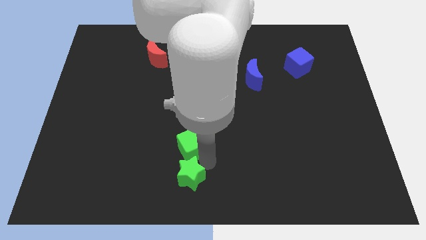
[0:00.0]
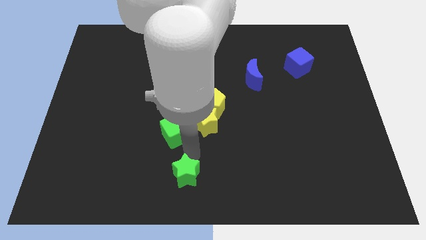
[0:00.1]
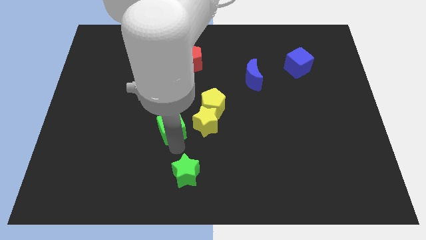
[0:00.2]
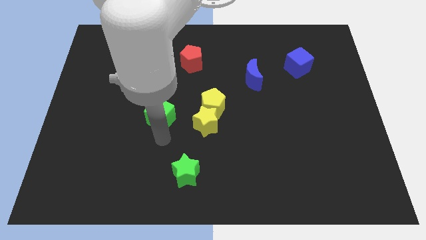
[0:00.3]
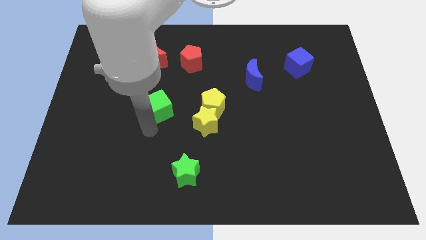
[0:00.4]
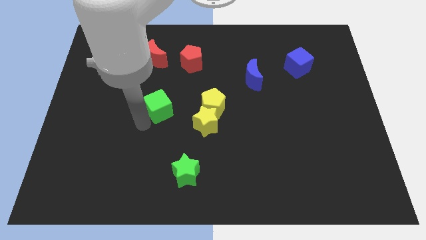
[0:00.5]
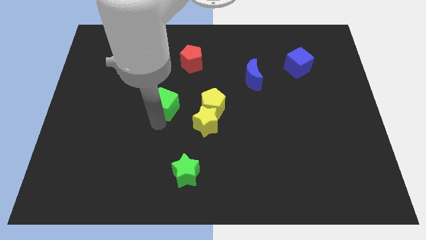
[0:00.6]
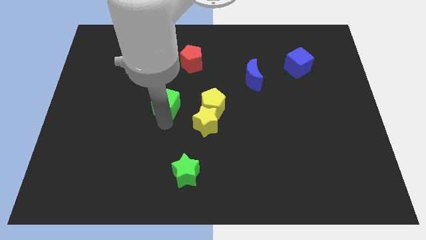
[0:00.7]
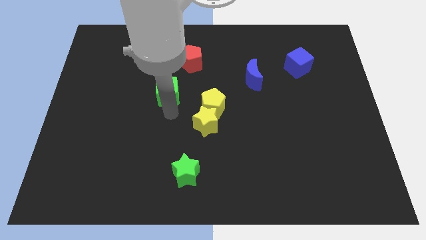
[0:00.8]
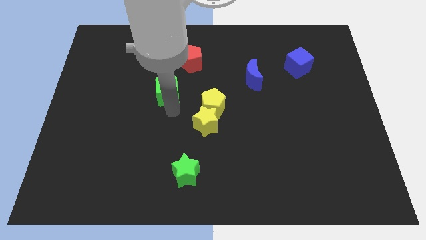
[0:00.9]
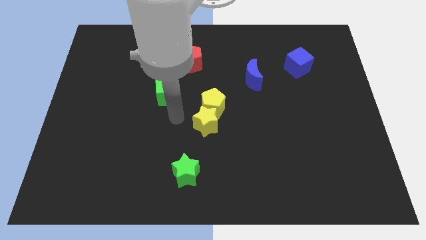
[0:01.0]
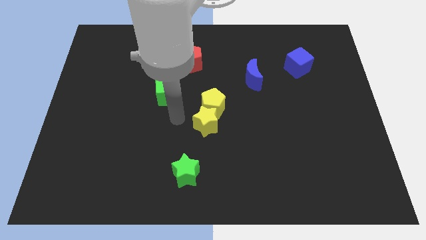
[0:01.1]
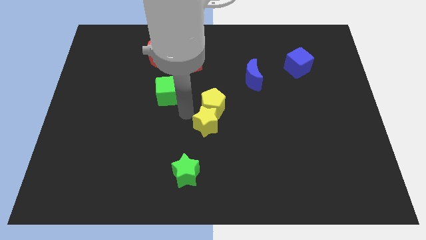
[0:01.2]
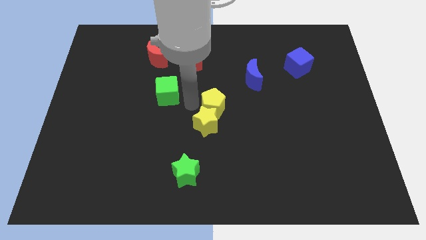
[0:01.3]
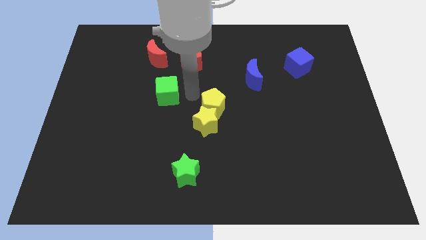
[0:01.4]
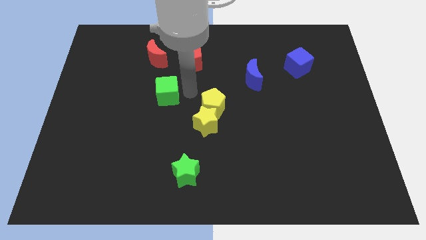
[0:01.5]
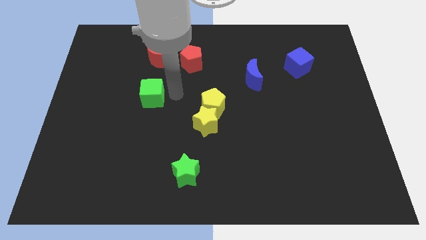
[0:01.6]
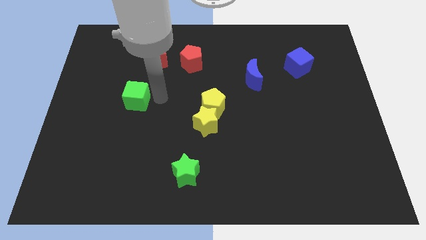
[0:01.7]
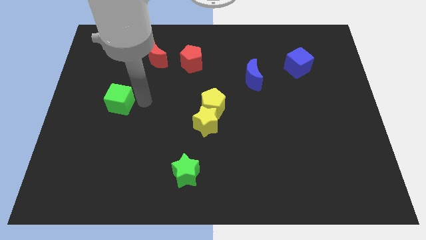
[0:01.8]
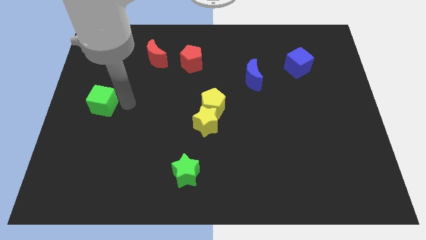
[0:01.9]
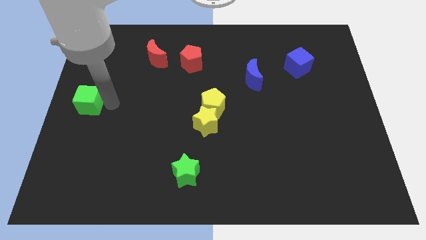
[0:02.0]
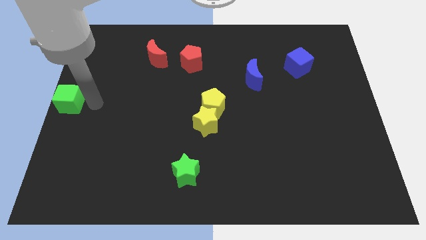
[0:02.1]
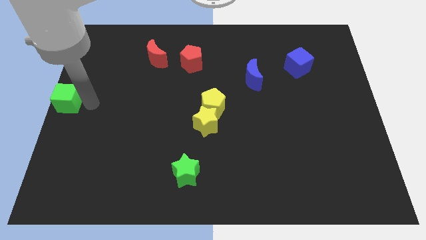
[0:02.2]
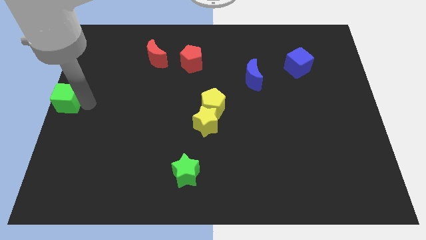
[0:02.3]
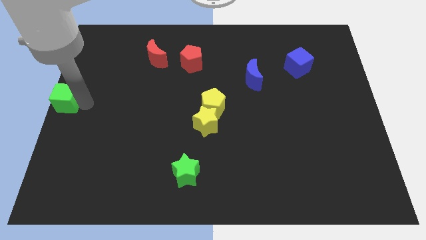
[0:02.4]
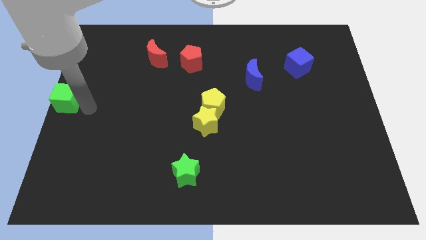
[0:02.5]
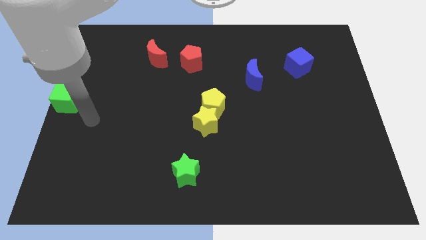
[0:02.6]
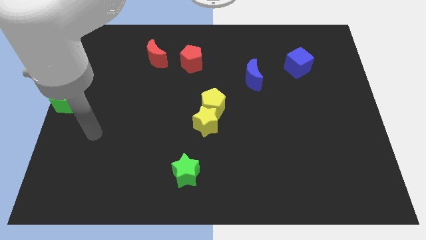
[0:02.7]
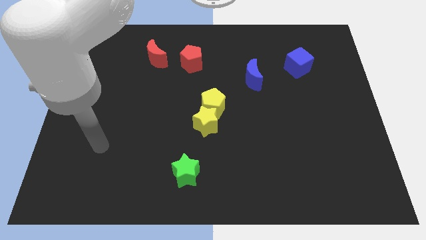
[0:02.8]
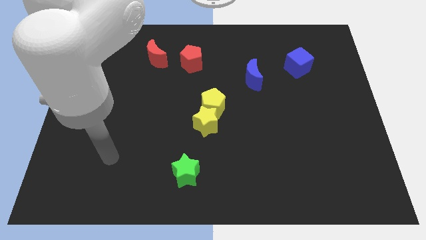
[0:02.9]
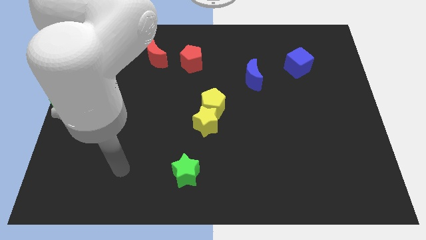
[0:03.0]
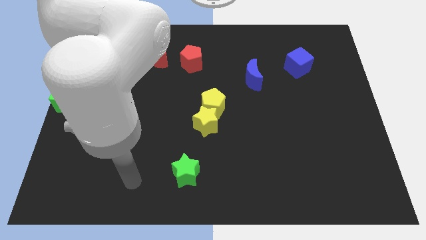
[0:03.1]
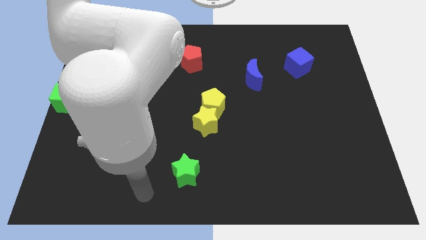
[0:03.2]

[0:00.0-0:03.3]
place green cube at the center left of the board

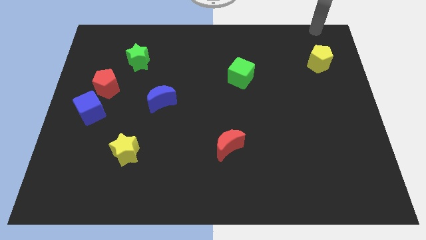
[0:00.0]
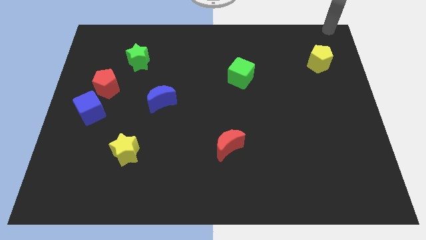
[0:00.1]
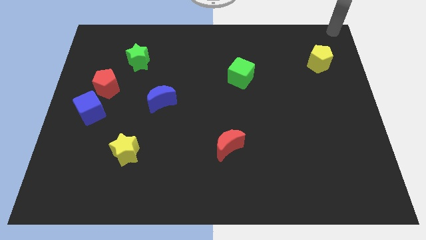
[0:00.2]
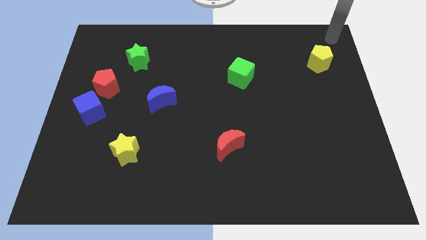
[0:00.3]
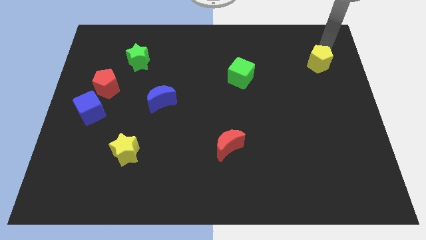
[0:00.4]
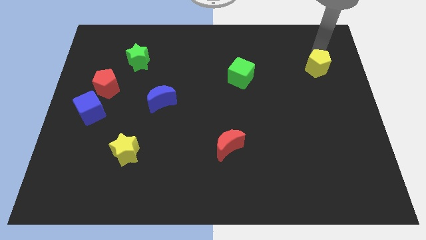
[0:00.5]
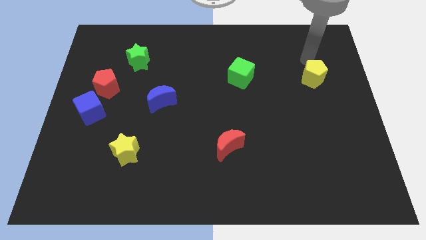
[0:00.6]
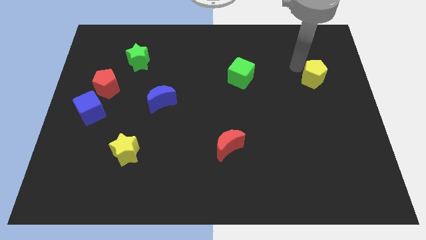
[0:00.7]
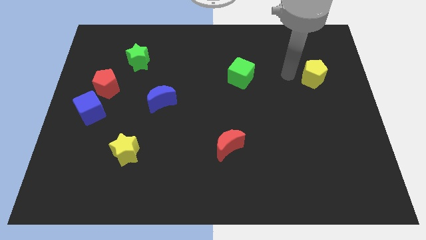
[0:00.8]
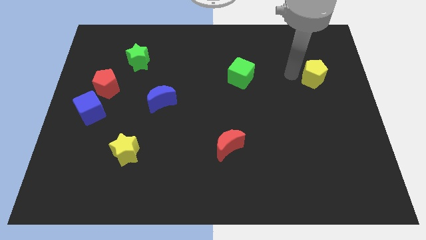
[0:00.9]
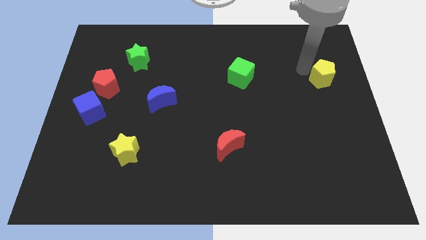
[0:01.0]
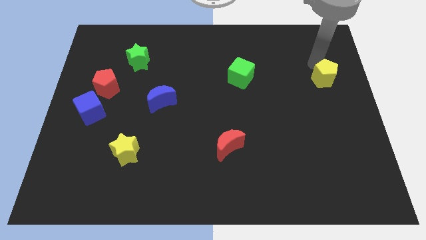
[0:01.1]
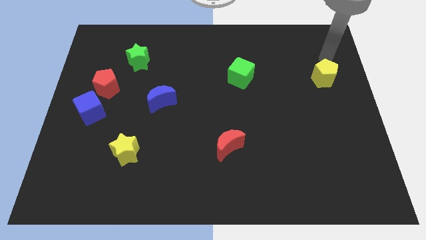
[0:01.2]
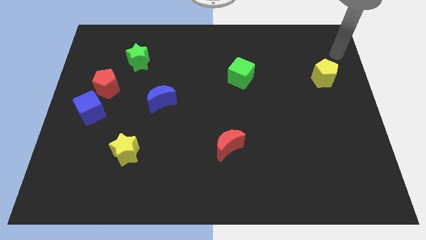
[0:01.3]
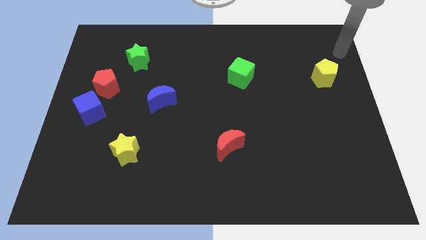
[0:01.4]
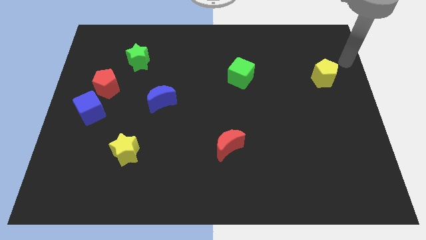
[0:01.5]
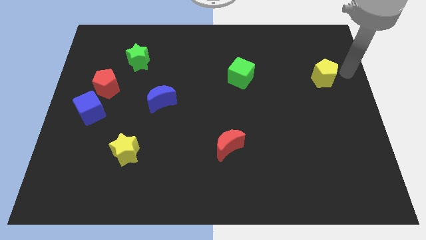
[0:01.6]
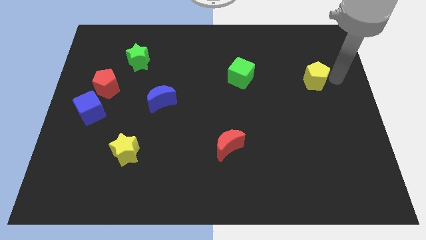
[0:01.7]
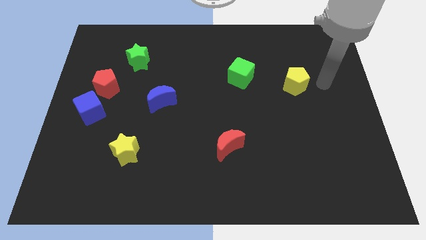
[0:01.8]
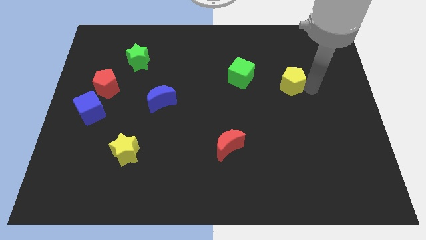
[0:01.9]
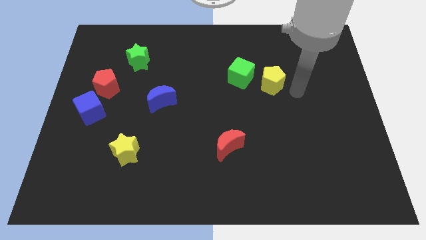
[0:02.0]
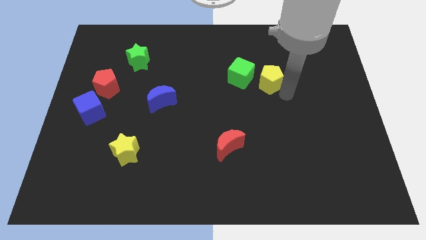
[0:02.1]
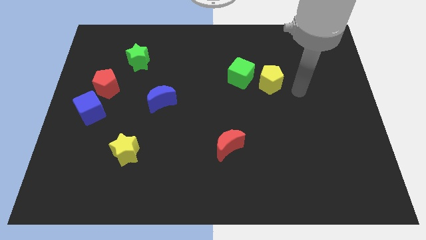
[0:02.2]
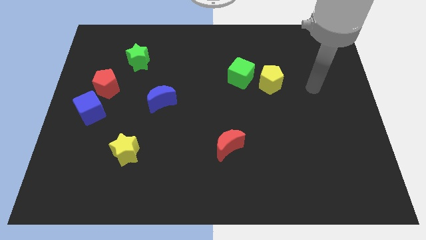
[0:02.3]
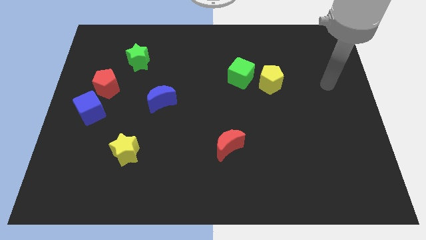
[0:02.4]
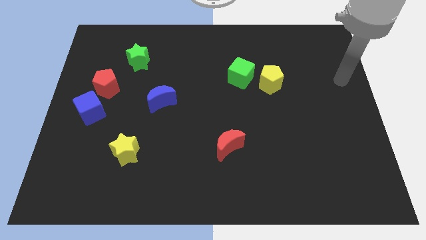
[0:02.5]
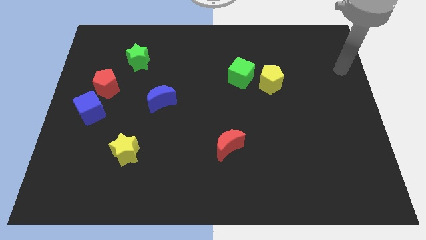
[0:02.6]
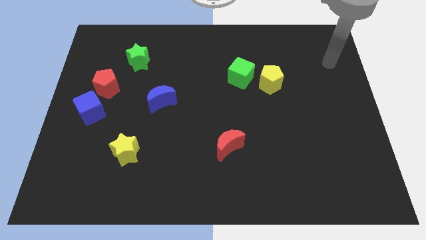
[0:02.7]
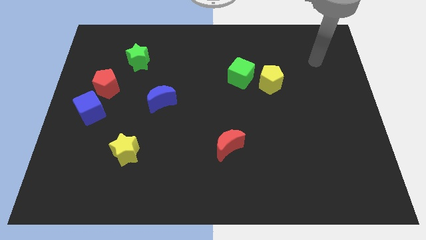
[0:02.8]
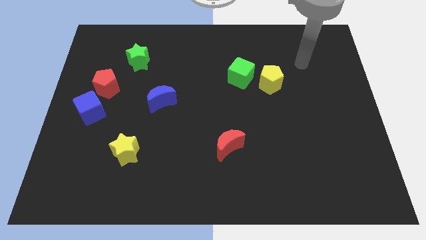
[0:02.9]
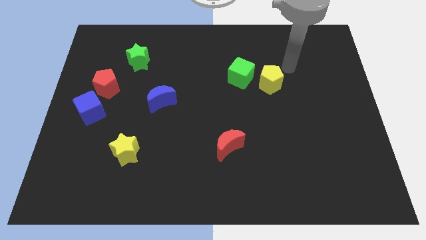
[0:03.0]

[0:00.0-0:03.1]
slide the yellow pentagon close to the right side of the green star

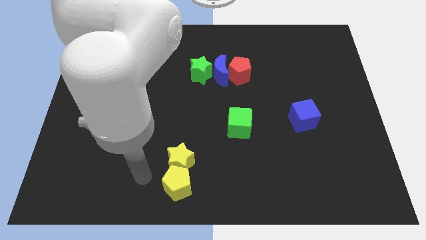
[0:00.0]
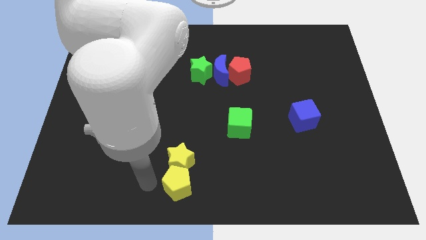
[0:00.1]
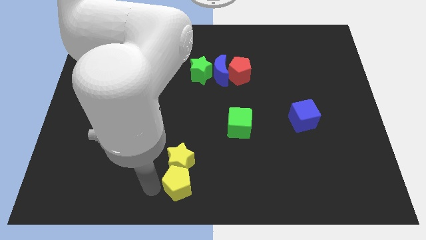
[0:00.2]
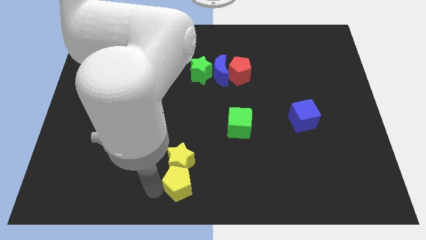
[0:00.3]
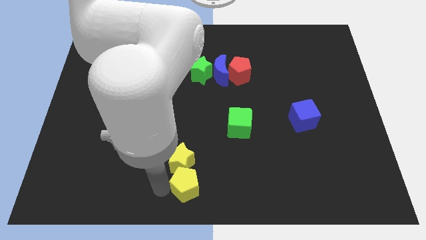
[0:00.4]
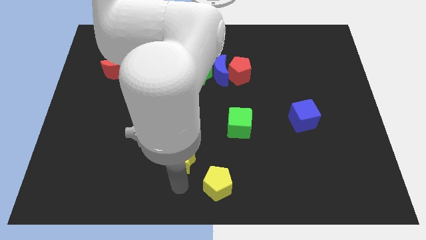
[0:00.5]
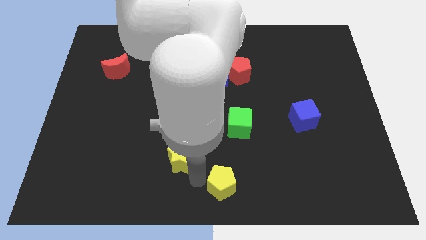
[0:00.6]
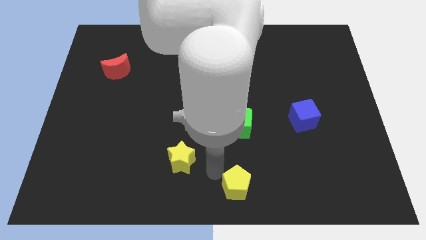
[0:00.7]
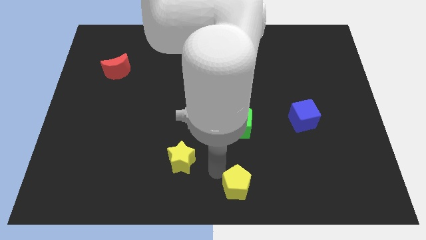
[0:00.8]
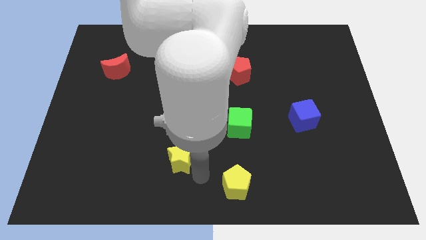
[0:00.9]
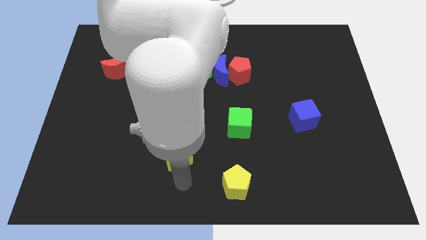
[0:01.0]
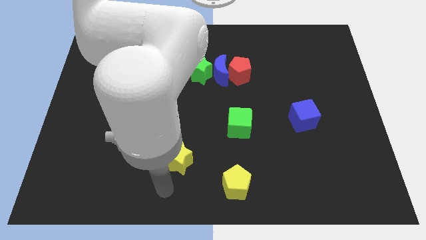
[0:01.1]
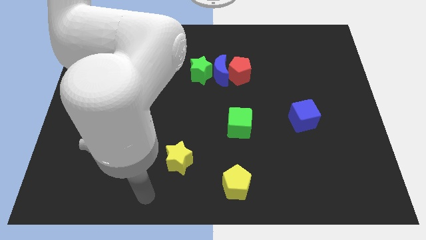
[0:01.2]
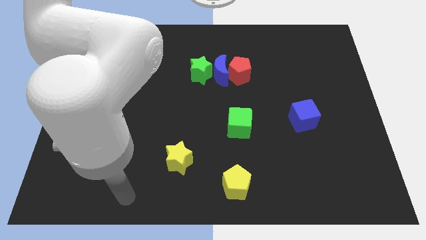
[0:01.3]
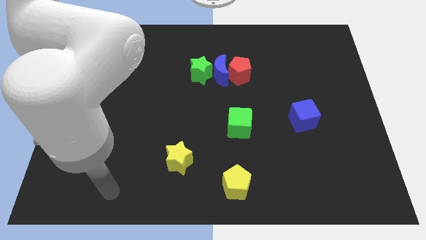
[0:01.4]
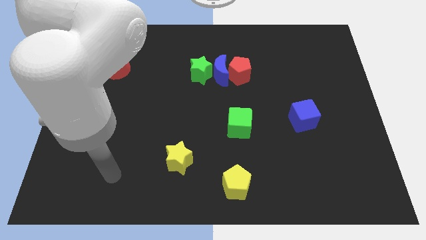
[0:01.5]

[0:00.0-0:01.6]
separate yellow pentagon from the yellow star

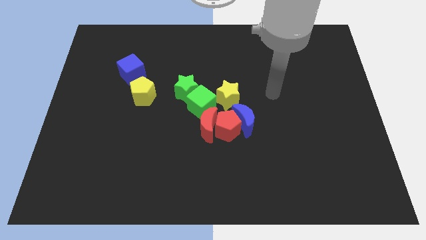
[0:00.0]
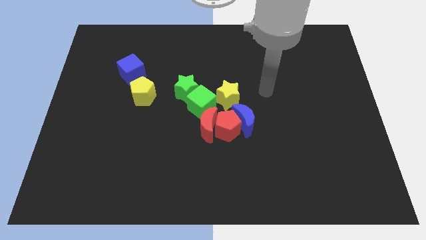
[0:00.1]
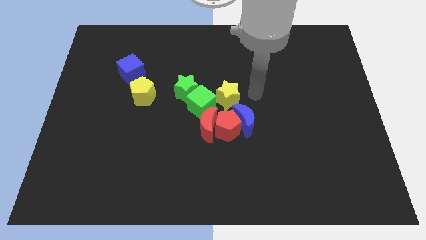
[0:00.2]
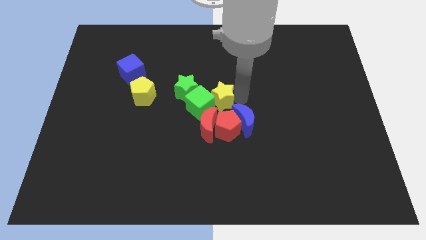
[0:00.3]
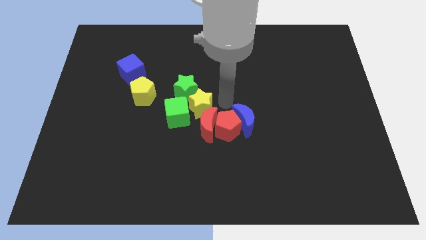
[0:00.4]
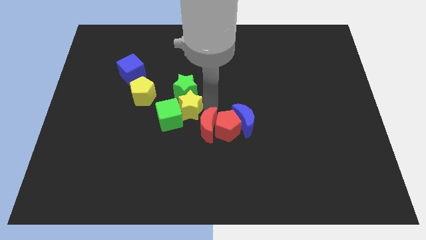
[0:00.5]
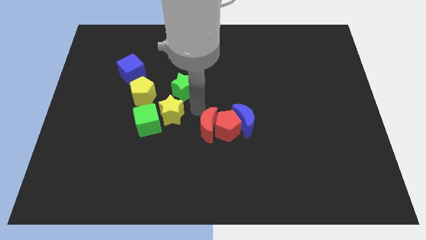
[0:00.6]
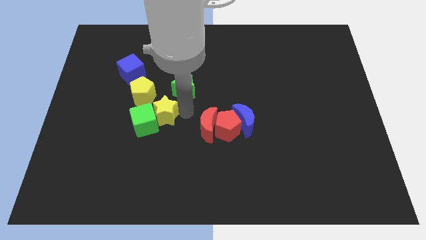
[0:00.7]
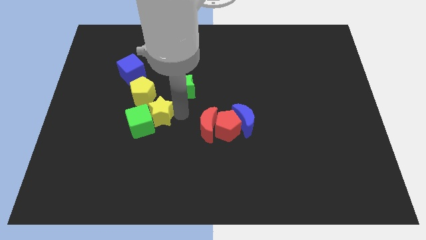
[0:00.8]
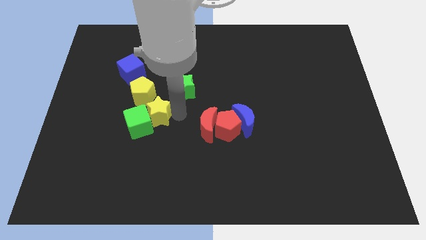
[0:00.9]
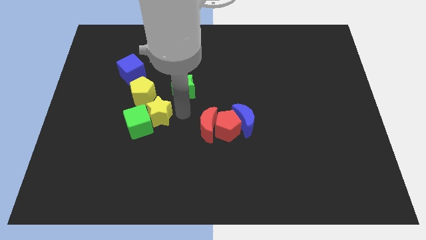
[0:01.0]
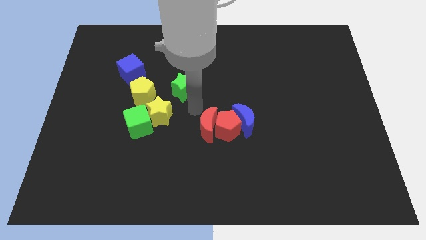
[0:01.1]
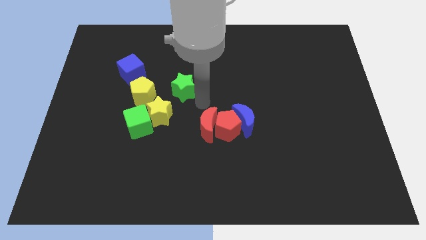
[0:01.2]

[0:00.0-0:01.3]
push green cube with yellow star slightly to the left
